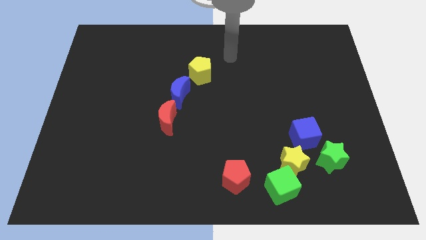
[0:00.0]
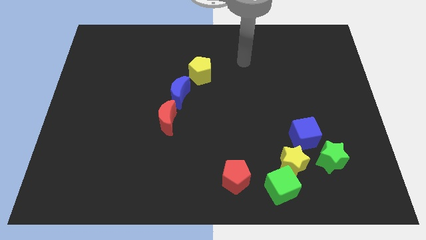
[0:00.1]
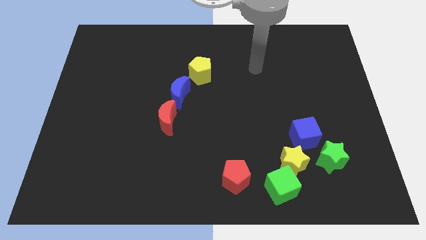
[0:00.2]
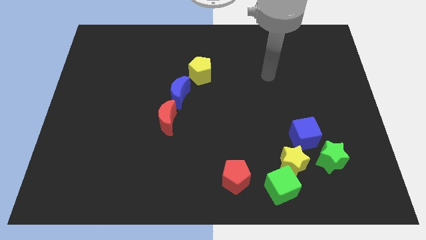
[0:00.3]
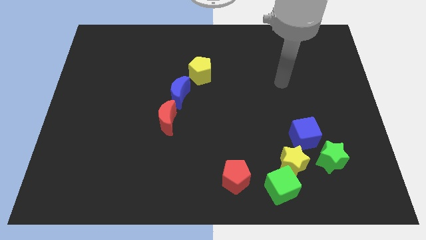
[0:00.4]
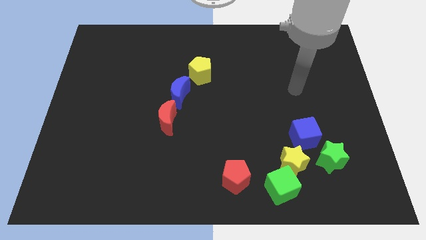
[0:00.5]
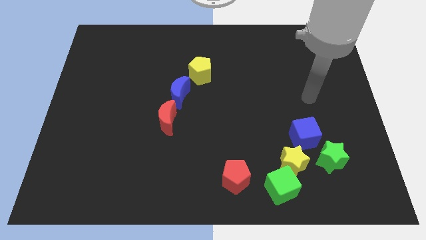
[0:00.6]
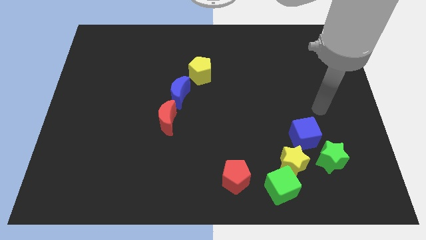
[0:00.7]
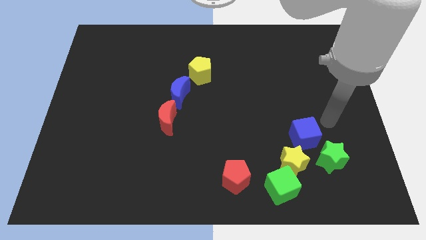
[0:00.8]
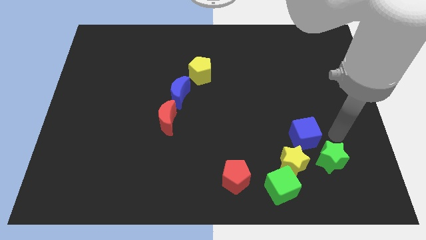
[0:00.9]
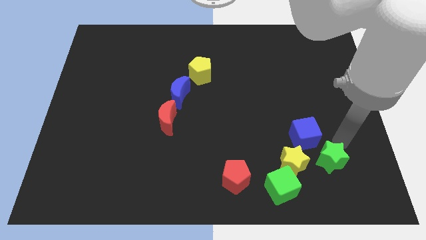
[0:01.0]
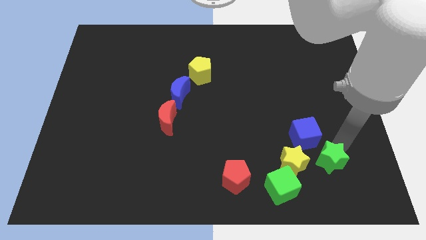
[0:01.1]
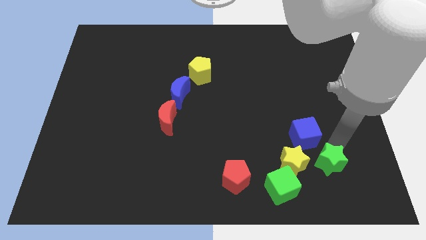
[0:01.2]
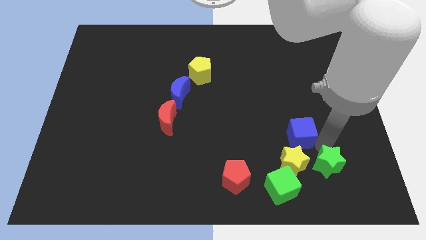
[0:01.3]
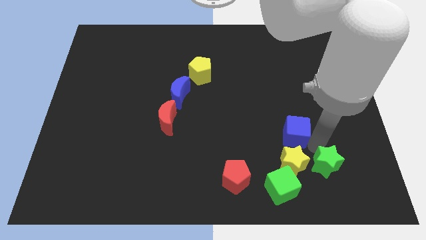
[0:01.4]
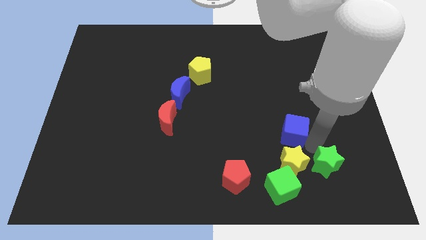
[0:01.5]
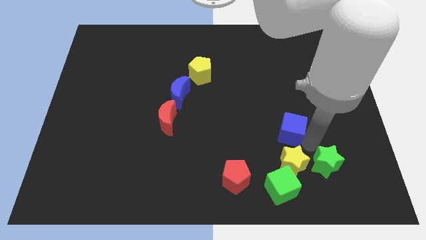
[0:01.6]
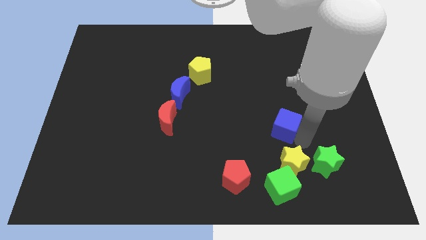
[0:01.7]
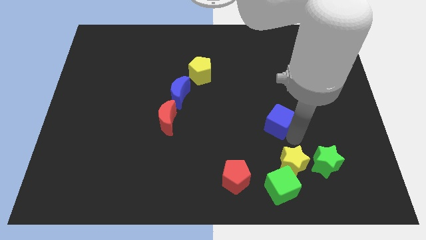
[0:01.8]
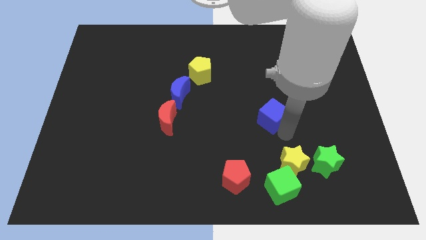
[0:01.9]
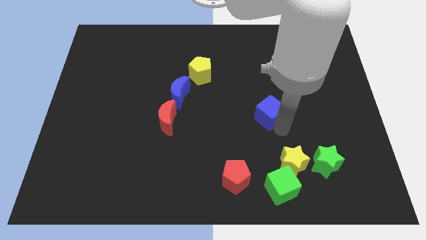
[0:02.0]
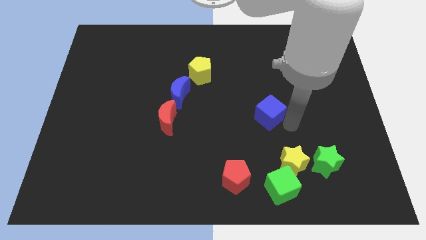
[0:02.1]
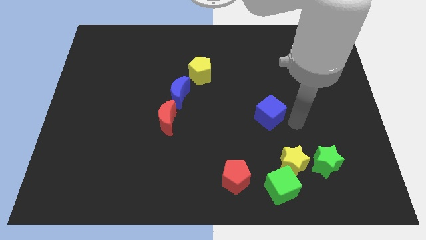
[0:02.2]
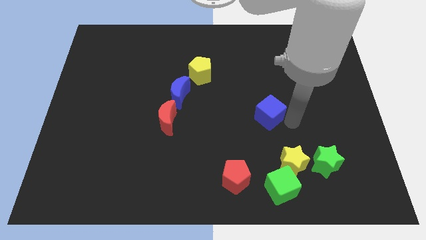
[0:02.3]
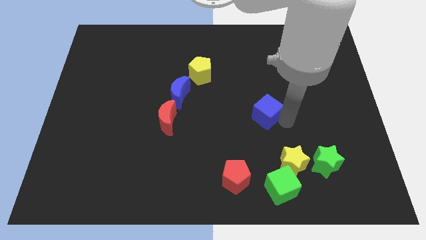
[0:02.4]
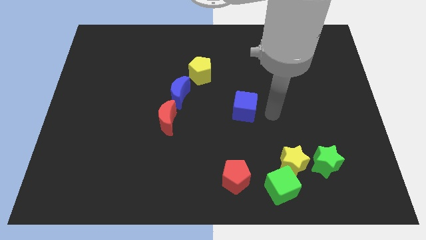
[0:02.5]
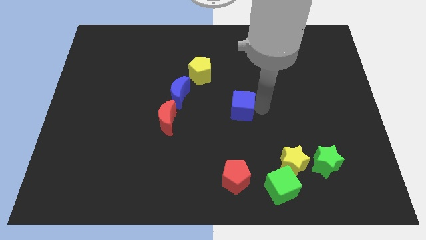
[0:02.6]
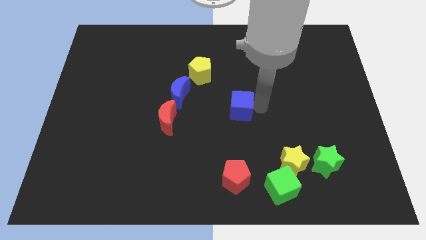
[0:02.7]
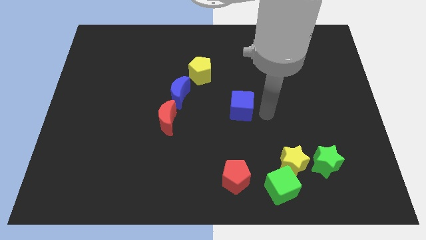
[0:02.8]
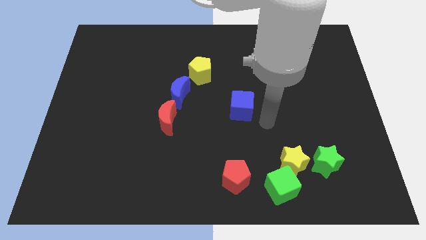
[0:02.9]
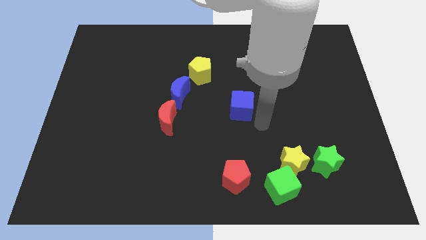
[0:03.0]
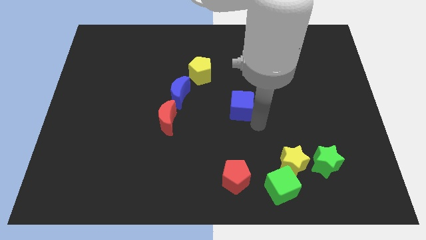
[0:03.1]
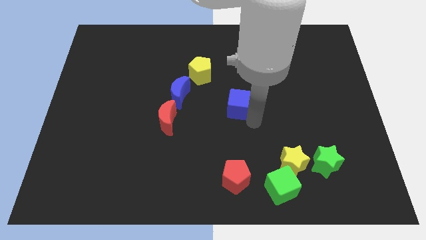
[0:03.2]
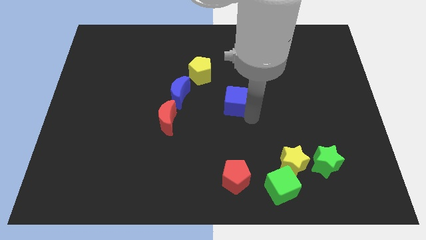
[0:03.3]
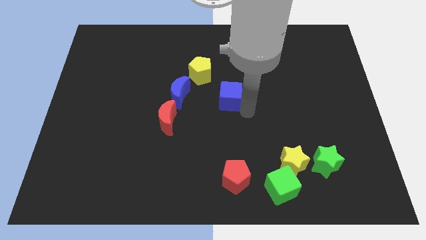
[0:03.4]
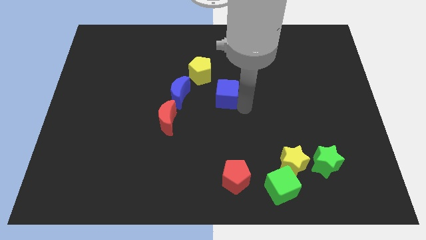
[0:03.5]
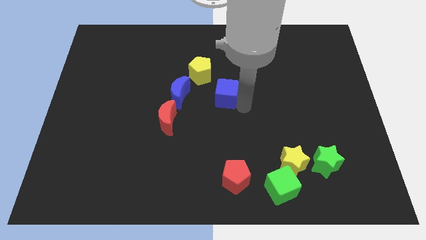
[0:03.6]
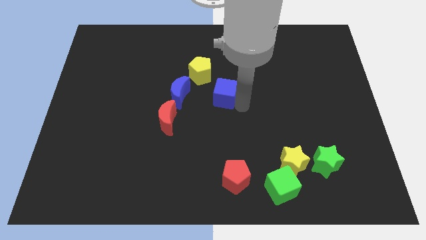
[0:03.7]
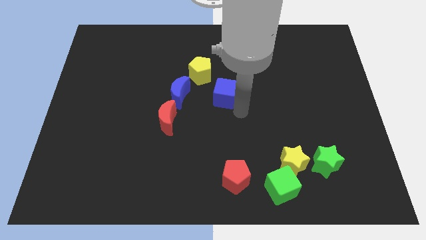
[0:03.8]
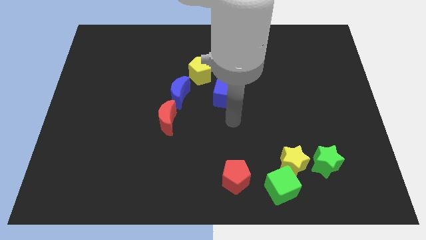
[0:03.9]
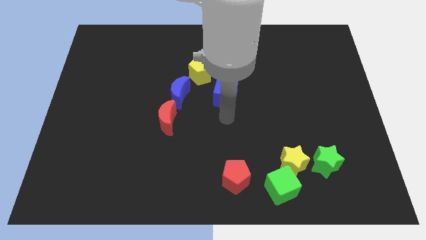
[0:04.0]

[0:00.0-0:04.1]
separate the blue cube from the group of blocks

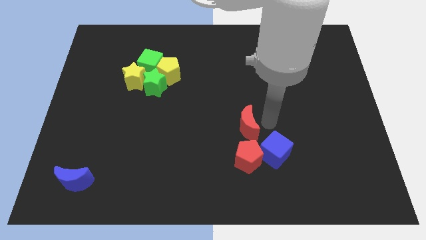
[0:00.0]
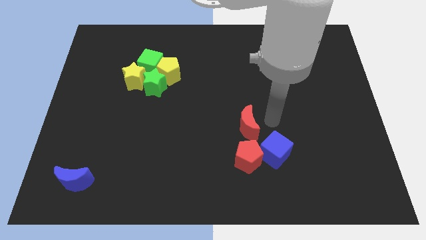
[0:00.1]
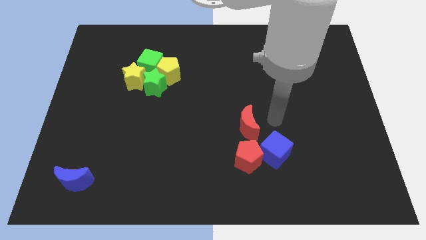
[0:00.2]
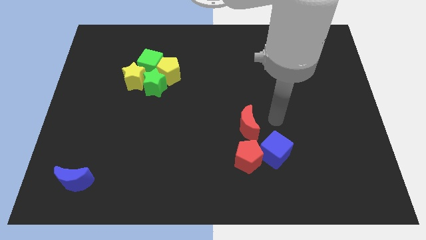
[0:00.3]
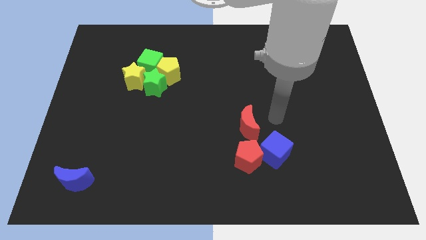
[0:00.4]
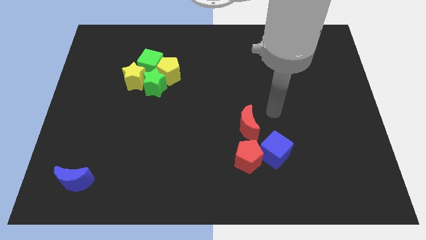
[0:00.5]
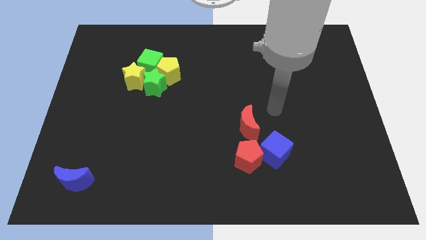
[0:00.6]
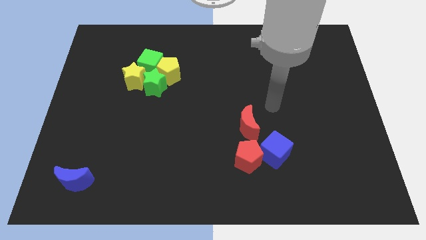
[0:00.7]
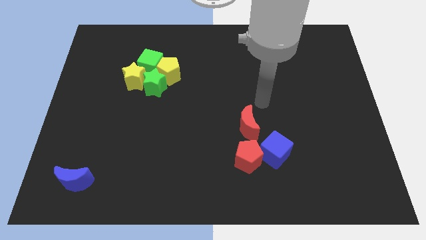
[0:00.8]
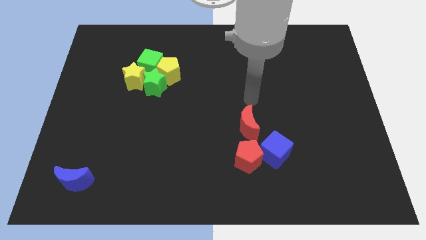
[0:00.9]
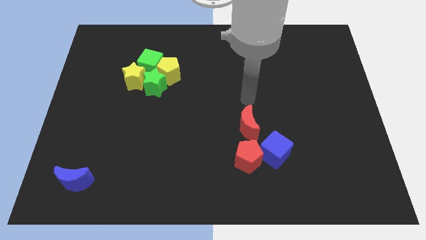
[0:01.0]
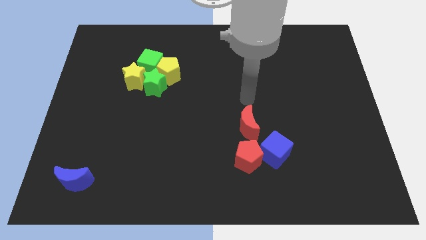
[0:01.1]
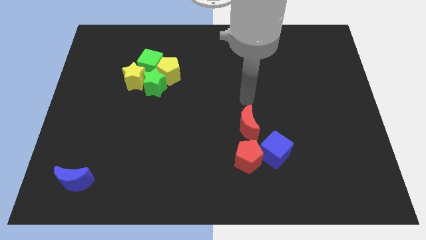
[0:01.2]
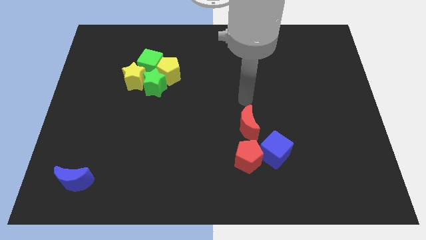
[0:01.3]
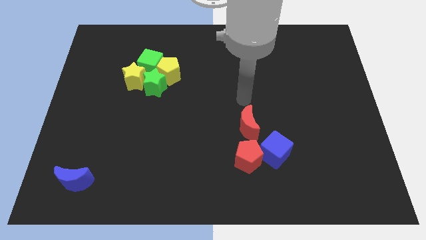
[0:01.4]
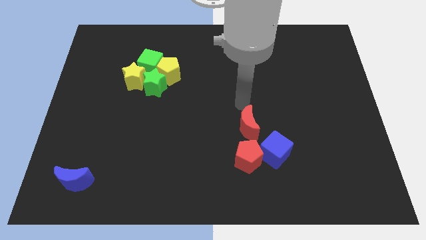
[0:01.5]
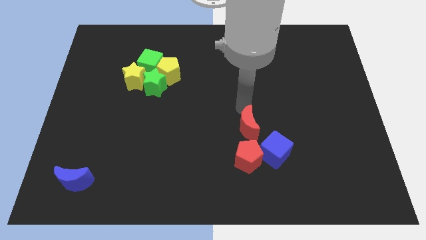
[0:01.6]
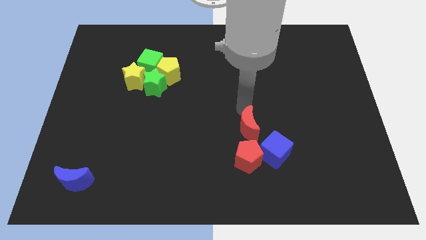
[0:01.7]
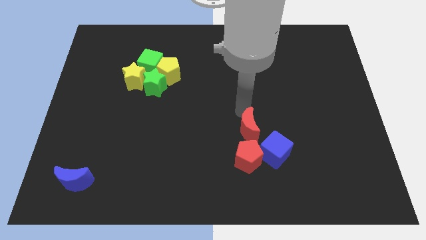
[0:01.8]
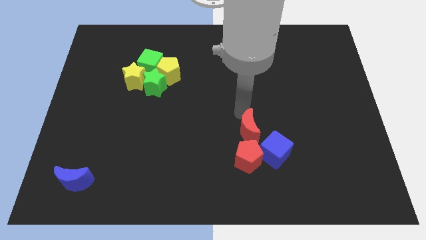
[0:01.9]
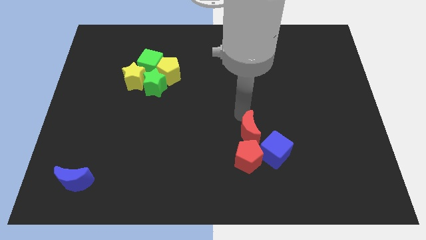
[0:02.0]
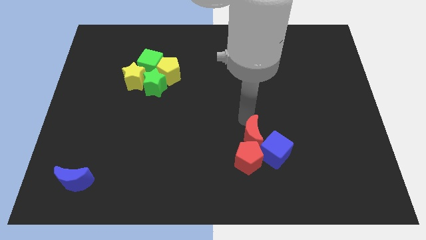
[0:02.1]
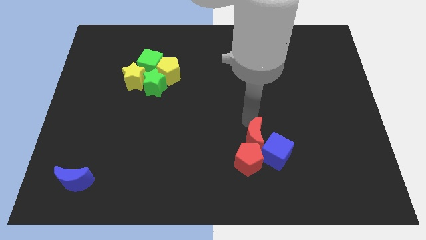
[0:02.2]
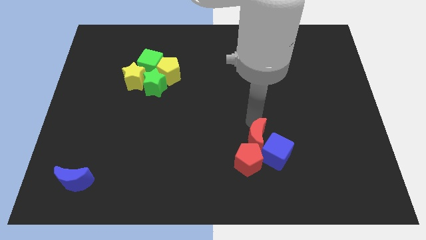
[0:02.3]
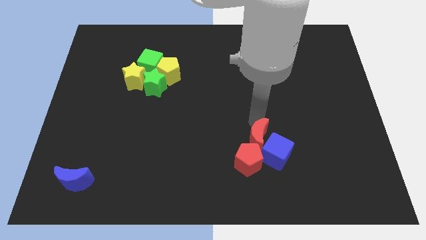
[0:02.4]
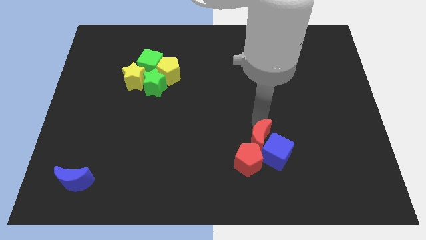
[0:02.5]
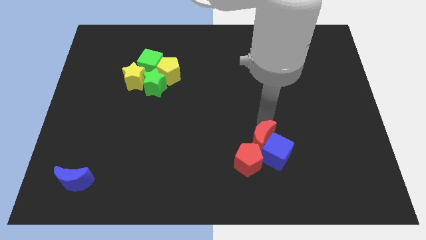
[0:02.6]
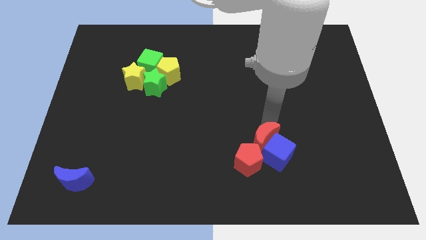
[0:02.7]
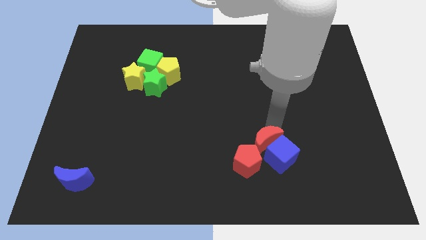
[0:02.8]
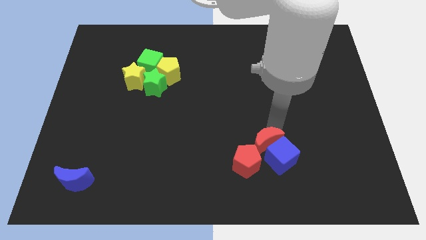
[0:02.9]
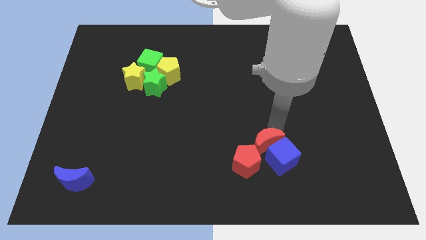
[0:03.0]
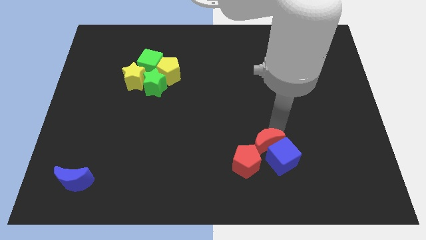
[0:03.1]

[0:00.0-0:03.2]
move the red moon into the blue cube

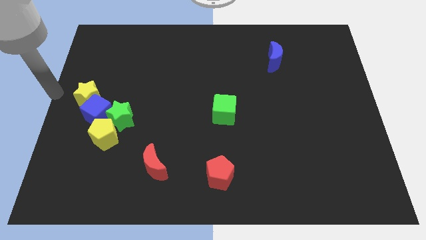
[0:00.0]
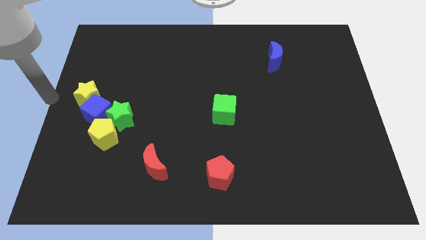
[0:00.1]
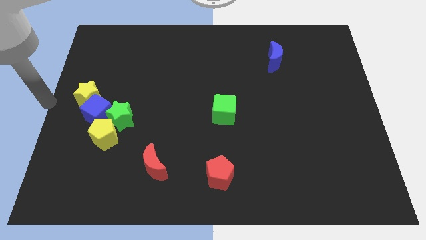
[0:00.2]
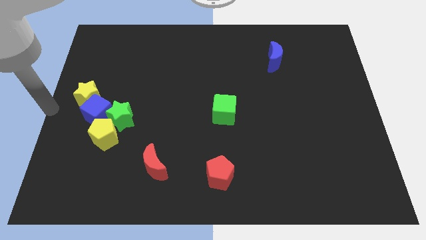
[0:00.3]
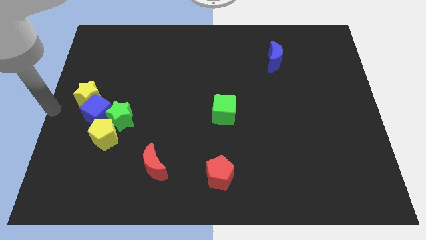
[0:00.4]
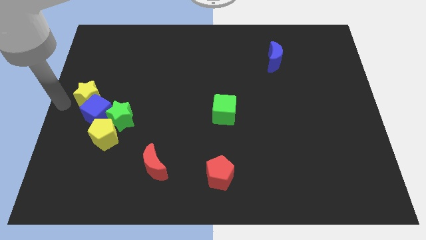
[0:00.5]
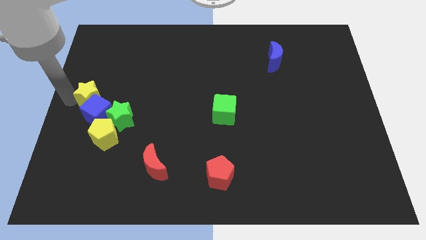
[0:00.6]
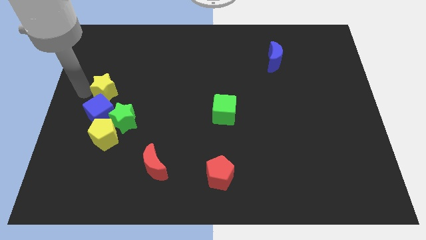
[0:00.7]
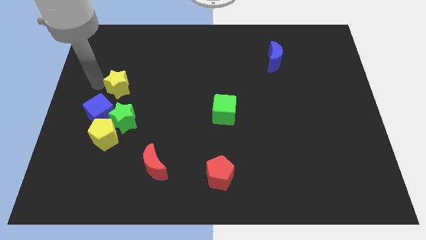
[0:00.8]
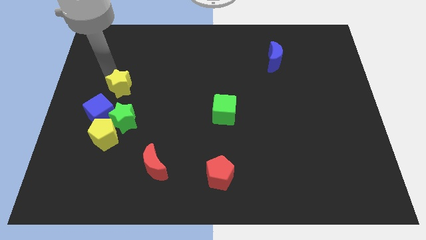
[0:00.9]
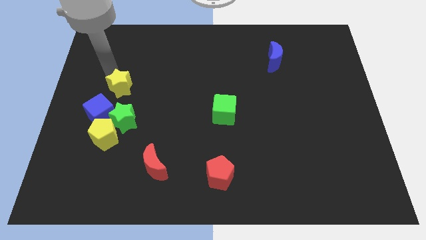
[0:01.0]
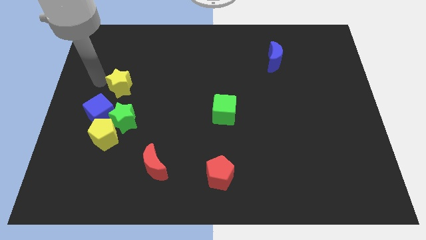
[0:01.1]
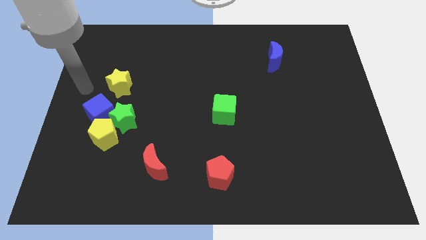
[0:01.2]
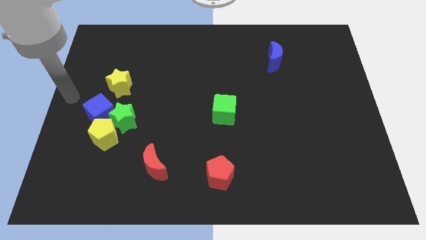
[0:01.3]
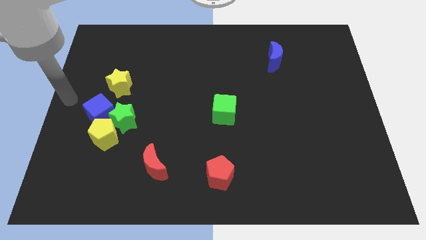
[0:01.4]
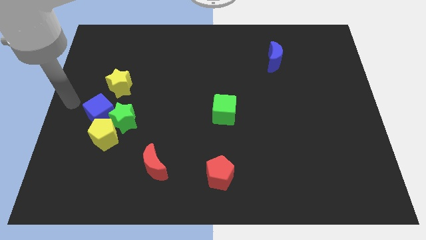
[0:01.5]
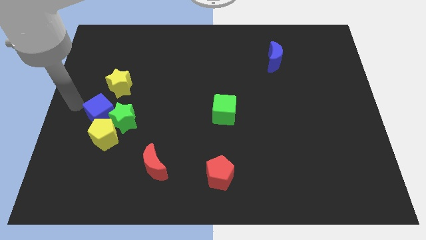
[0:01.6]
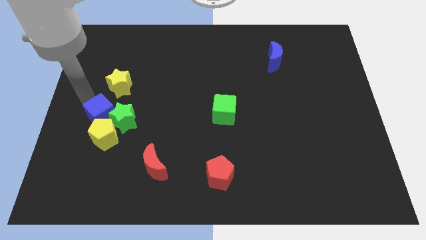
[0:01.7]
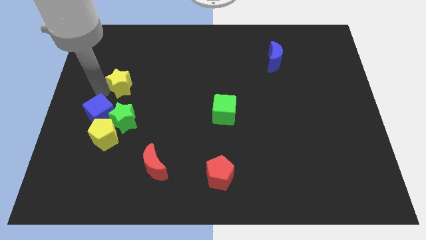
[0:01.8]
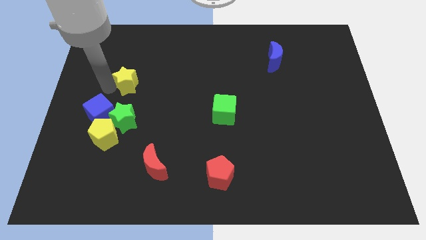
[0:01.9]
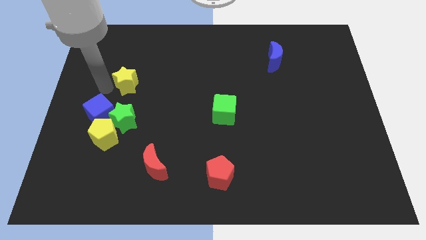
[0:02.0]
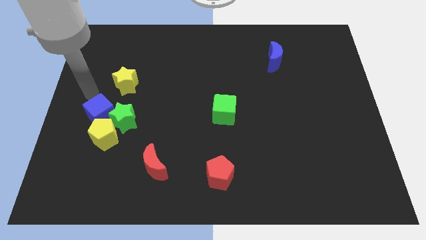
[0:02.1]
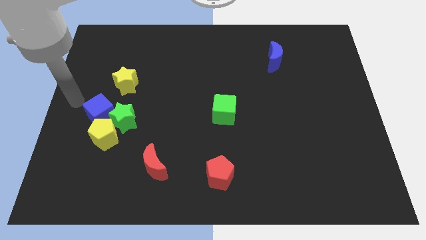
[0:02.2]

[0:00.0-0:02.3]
place yellow star above green star
